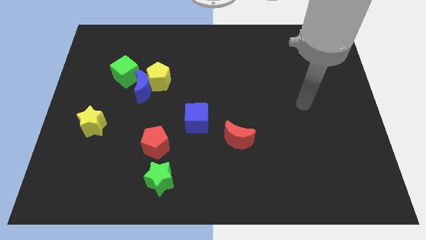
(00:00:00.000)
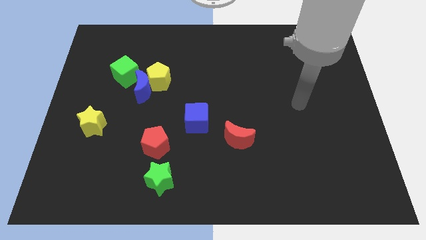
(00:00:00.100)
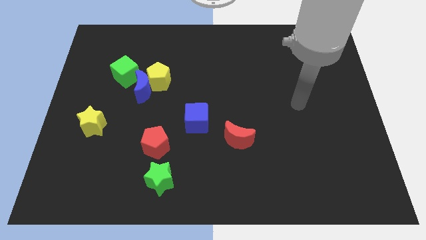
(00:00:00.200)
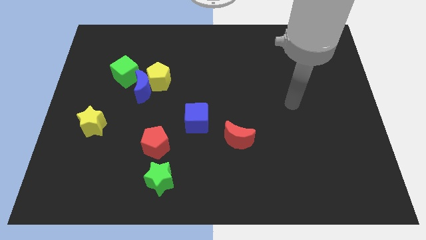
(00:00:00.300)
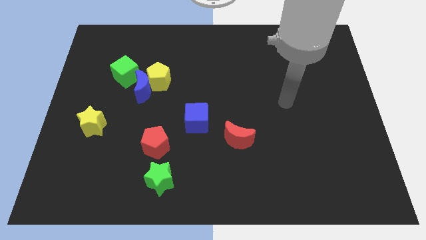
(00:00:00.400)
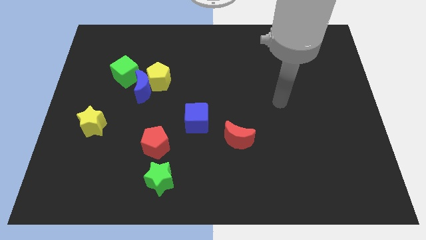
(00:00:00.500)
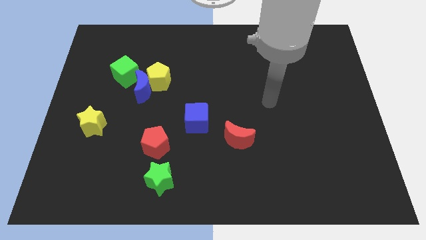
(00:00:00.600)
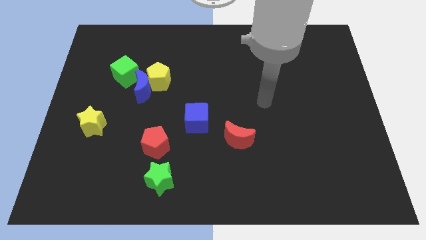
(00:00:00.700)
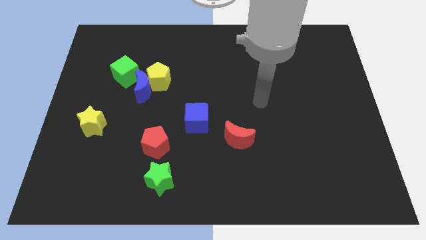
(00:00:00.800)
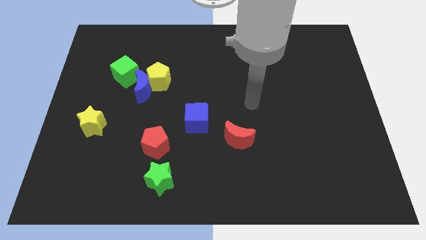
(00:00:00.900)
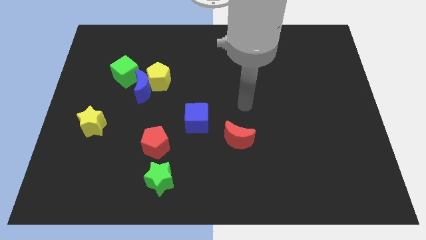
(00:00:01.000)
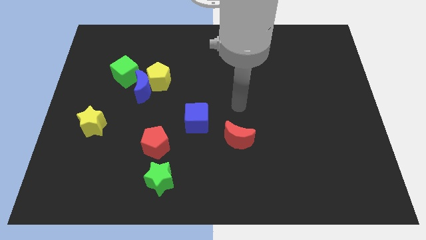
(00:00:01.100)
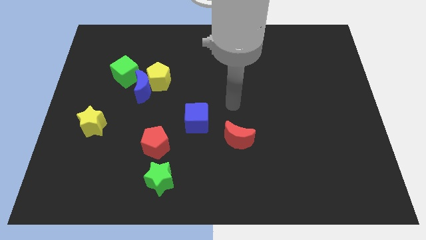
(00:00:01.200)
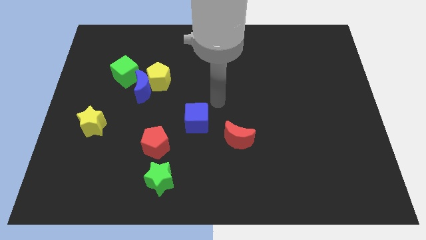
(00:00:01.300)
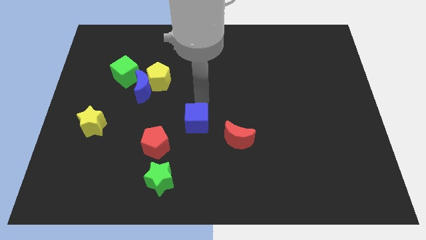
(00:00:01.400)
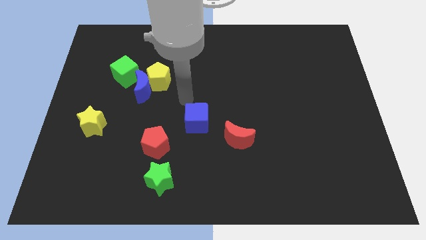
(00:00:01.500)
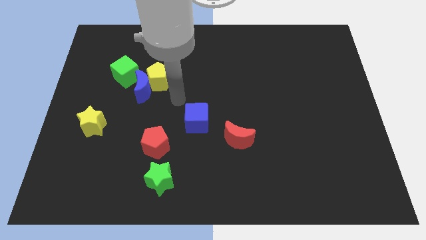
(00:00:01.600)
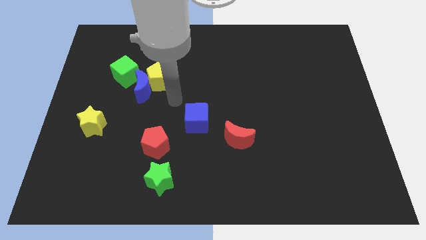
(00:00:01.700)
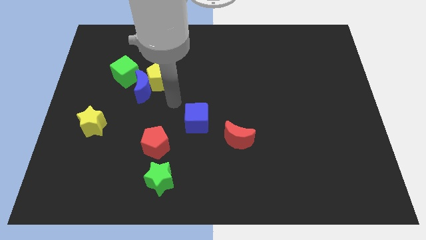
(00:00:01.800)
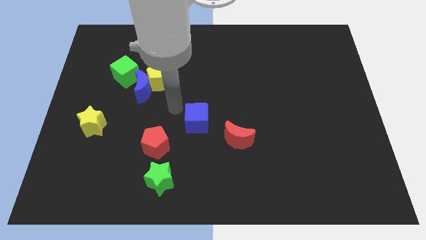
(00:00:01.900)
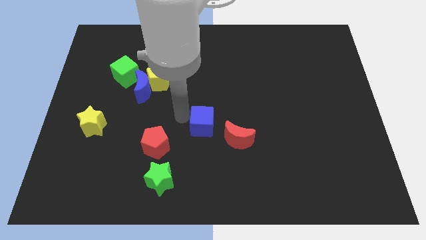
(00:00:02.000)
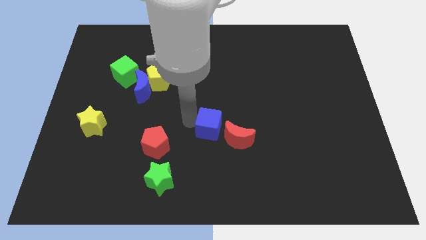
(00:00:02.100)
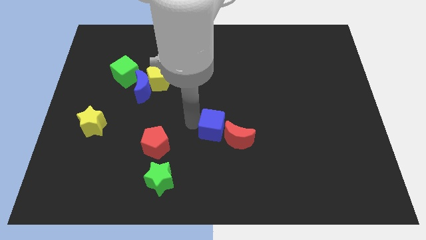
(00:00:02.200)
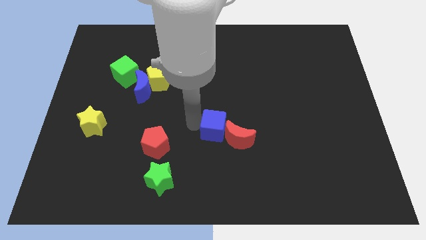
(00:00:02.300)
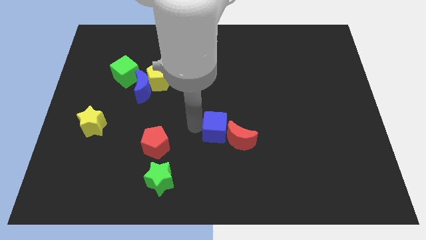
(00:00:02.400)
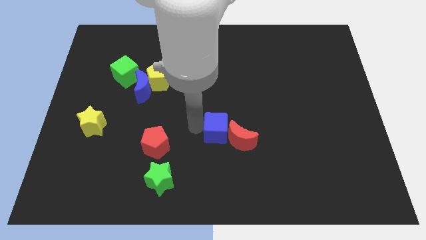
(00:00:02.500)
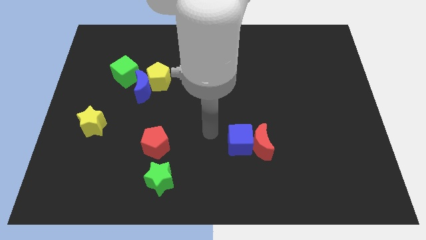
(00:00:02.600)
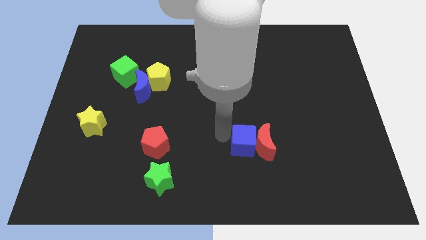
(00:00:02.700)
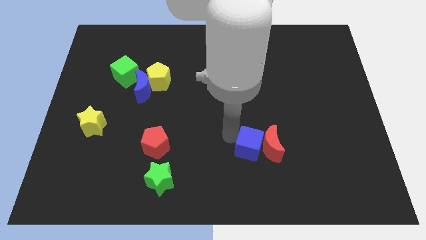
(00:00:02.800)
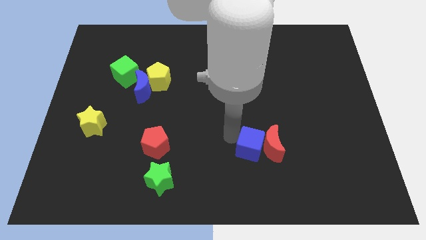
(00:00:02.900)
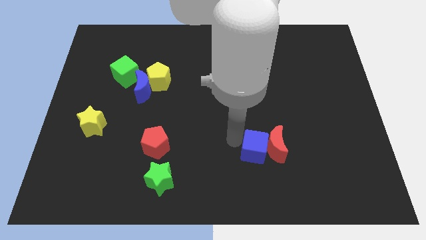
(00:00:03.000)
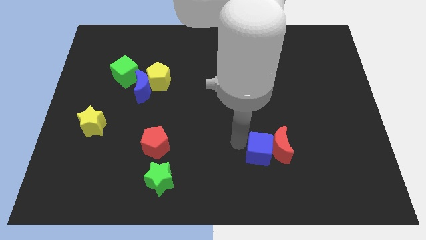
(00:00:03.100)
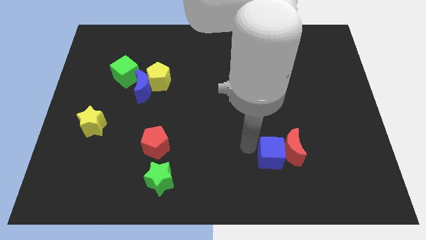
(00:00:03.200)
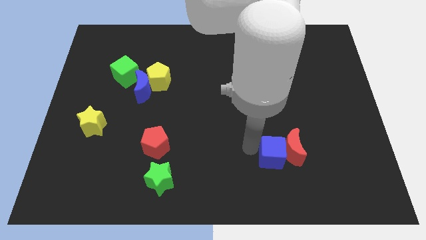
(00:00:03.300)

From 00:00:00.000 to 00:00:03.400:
push the red moon into the blue cube

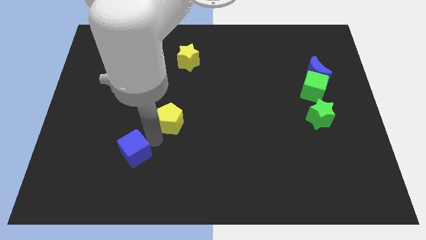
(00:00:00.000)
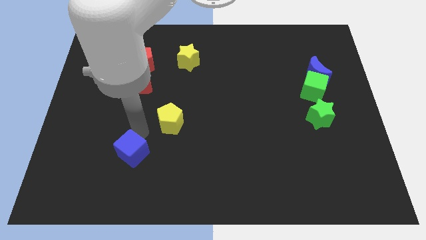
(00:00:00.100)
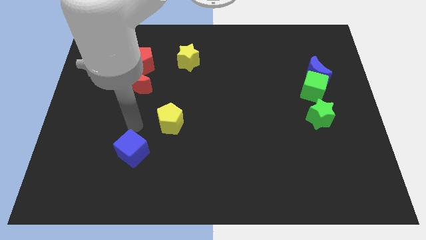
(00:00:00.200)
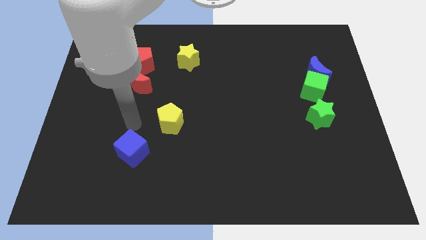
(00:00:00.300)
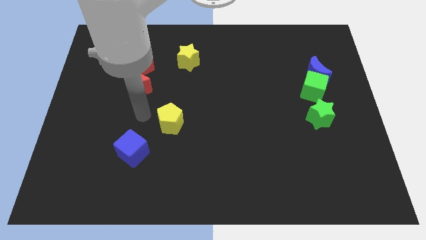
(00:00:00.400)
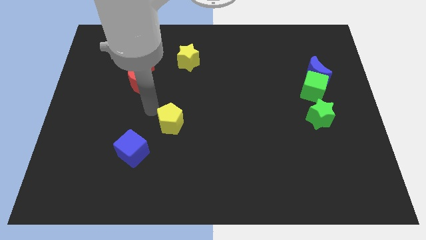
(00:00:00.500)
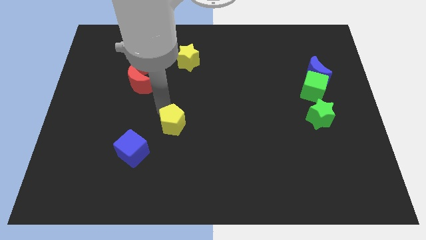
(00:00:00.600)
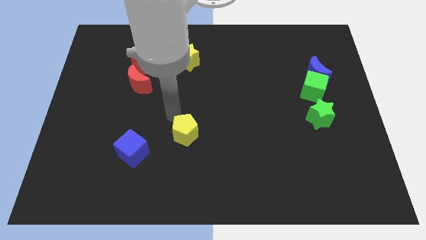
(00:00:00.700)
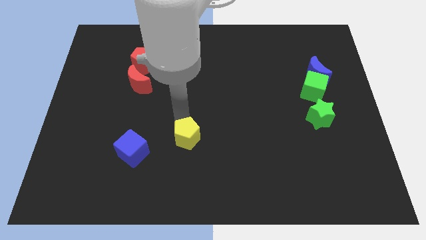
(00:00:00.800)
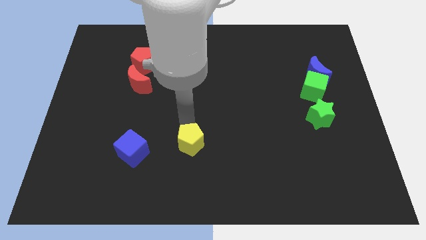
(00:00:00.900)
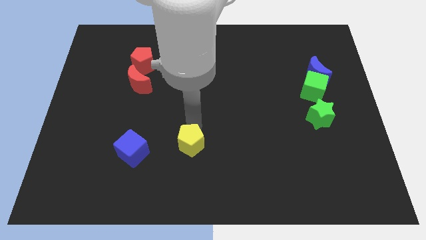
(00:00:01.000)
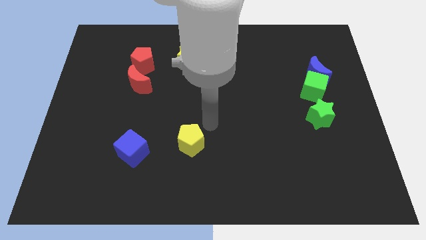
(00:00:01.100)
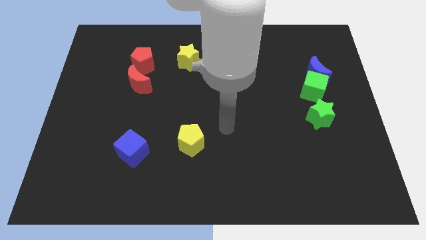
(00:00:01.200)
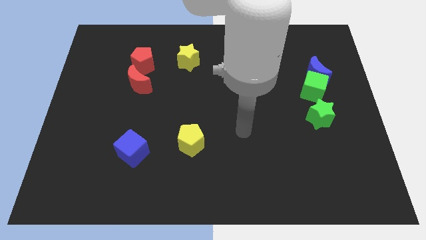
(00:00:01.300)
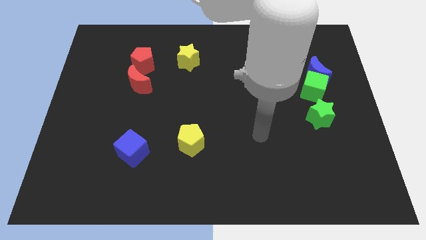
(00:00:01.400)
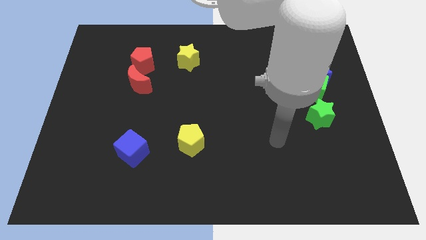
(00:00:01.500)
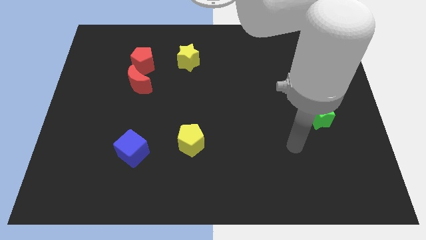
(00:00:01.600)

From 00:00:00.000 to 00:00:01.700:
place yellow pentagon right to blue cube

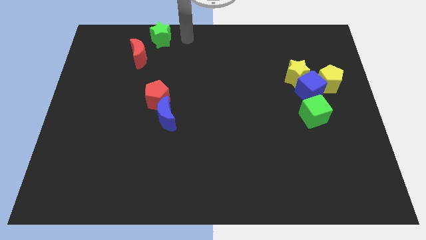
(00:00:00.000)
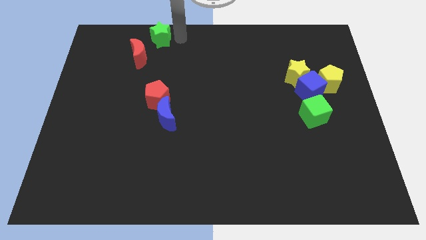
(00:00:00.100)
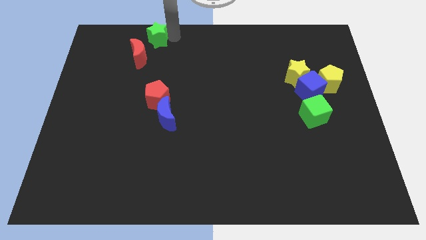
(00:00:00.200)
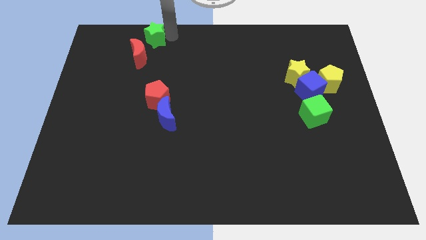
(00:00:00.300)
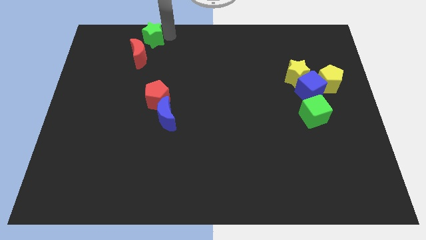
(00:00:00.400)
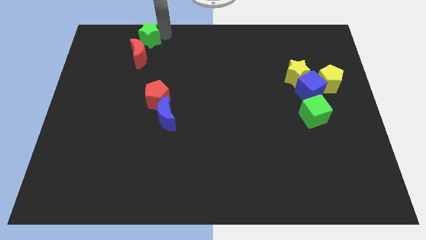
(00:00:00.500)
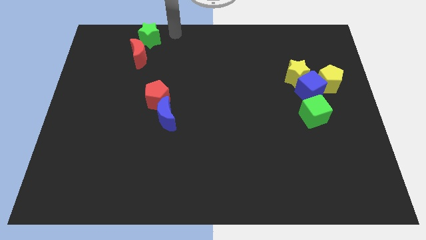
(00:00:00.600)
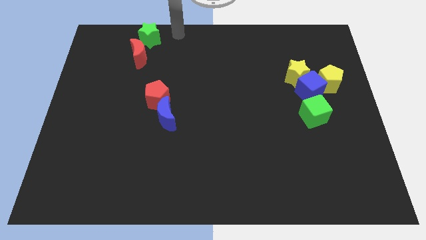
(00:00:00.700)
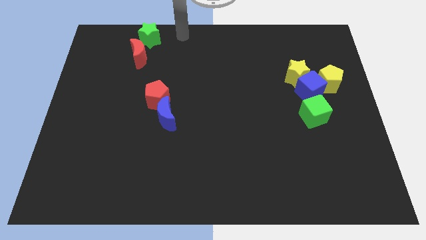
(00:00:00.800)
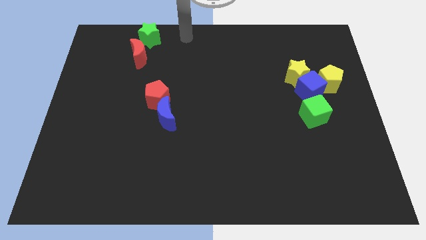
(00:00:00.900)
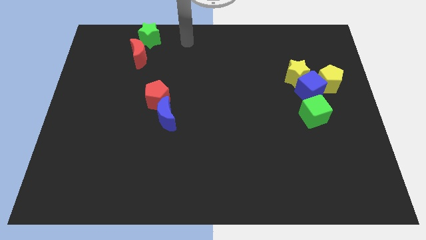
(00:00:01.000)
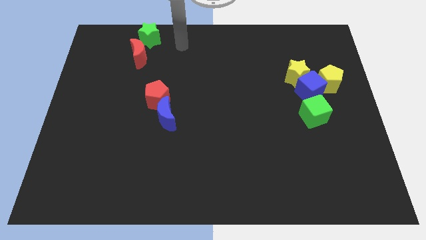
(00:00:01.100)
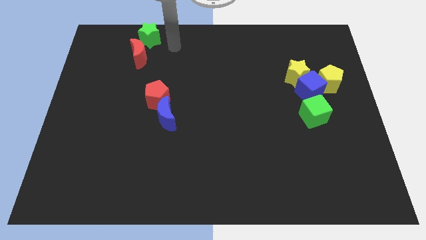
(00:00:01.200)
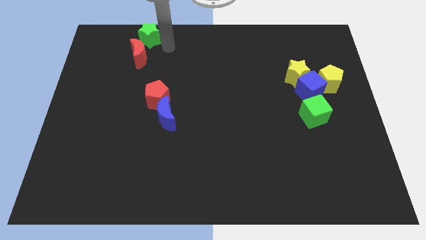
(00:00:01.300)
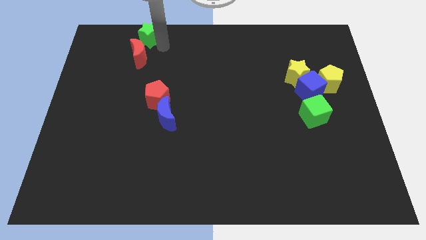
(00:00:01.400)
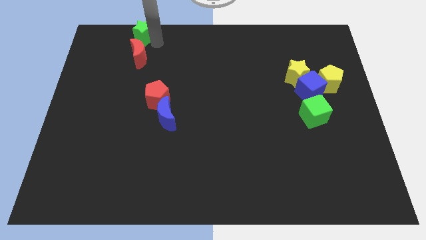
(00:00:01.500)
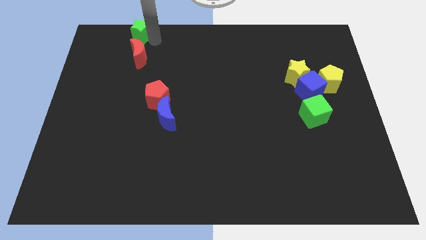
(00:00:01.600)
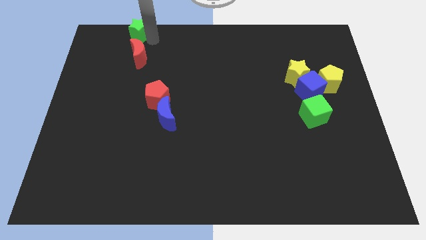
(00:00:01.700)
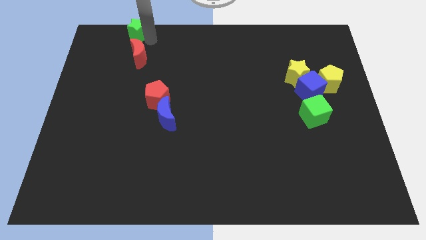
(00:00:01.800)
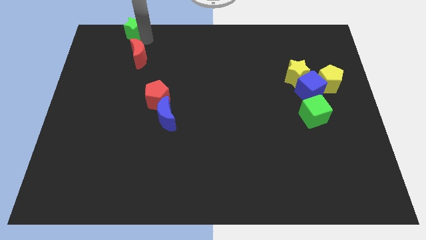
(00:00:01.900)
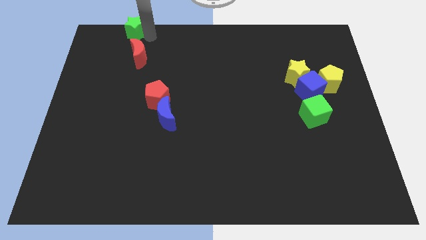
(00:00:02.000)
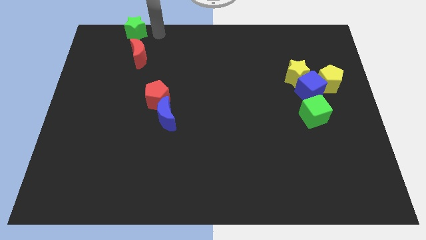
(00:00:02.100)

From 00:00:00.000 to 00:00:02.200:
place green star to the top of red moon

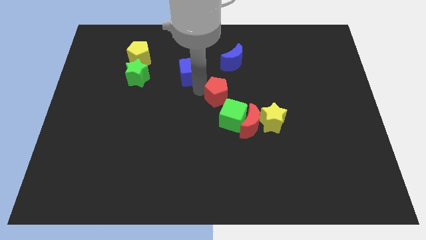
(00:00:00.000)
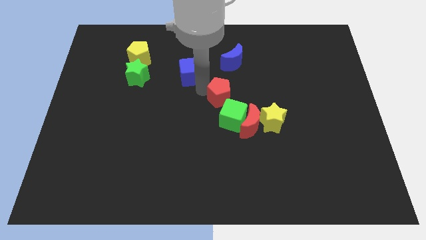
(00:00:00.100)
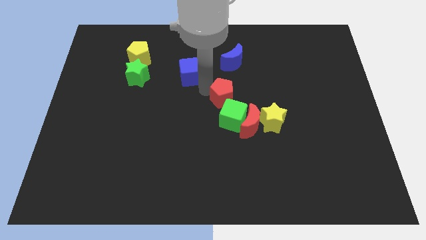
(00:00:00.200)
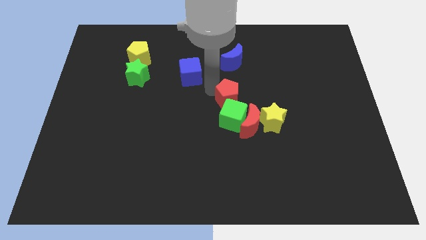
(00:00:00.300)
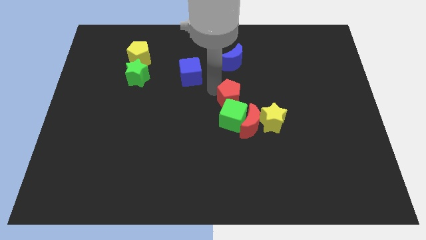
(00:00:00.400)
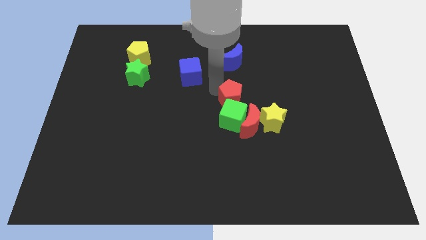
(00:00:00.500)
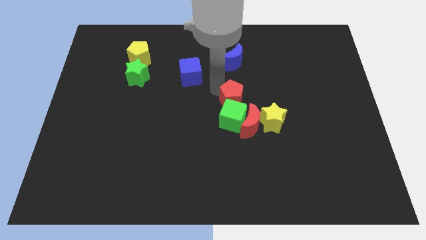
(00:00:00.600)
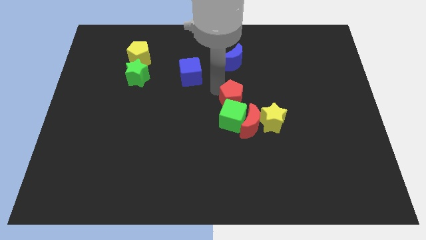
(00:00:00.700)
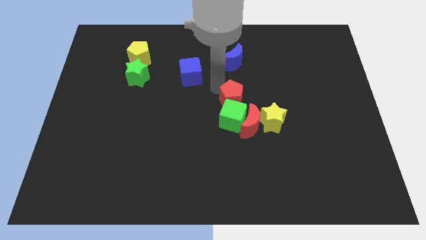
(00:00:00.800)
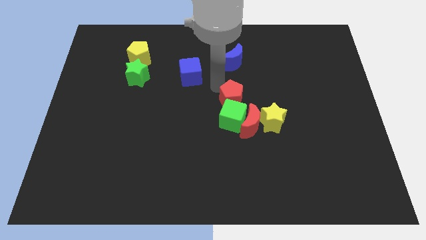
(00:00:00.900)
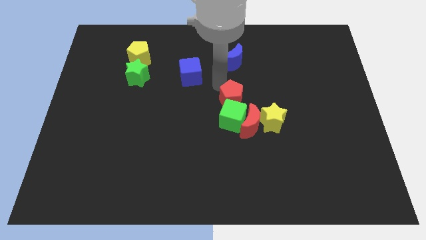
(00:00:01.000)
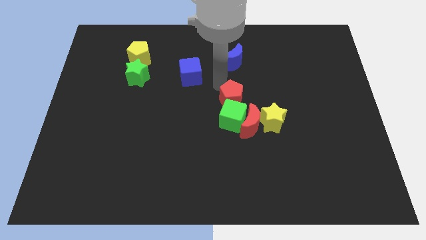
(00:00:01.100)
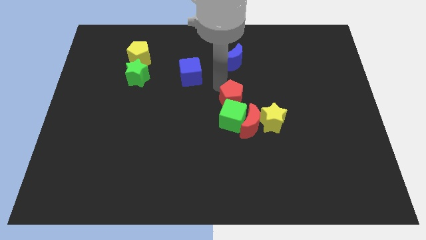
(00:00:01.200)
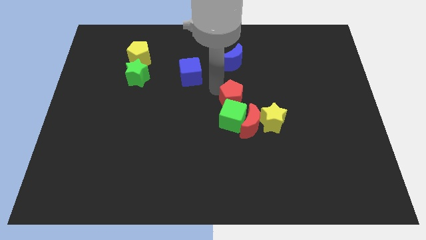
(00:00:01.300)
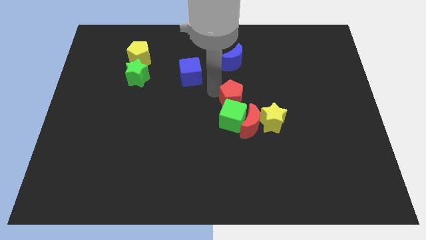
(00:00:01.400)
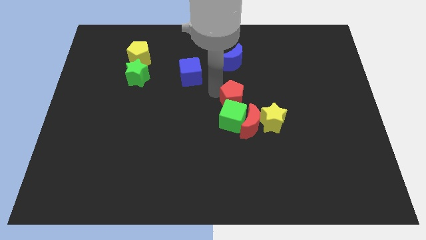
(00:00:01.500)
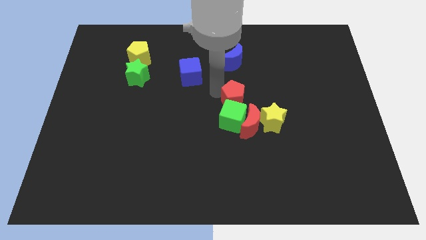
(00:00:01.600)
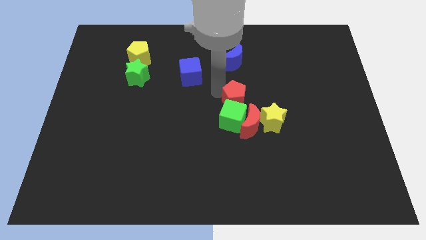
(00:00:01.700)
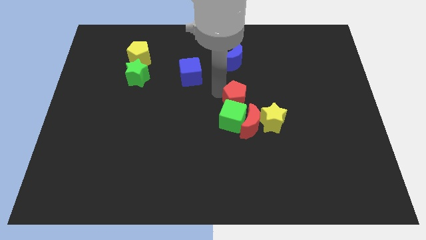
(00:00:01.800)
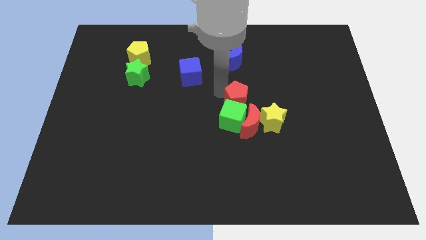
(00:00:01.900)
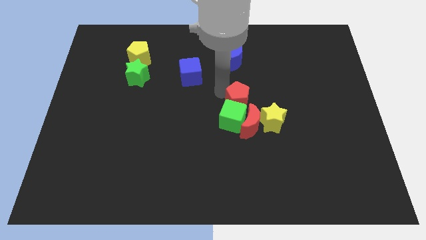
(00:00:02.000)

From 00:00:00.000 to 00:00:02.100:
put the red pentagon on the top of the green cube
